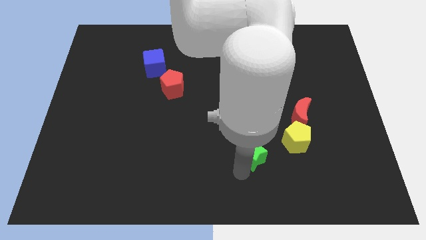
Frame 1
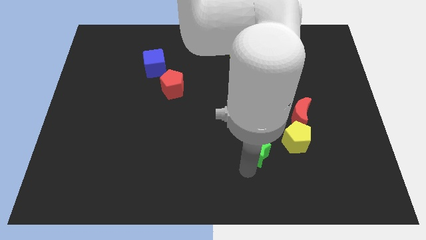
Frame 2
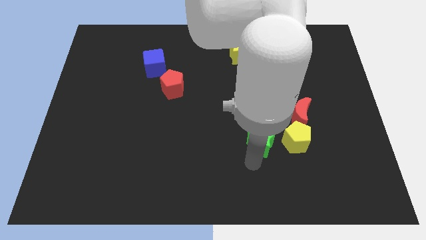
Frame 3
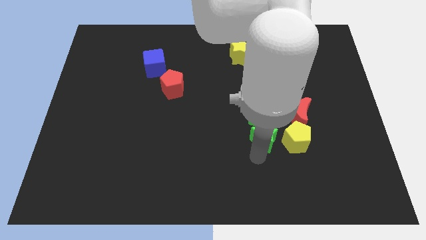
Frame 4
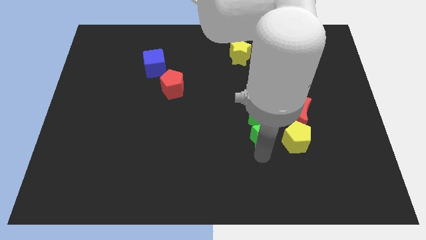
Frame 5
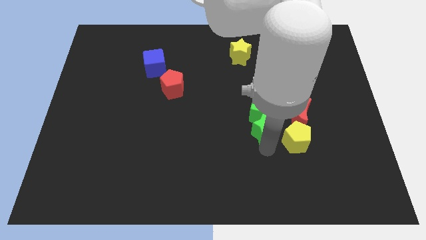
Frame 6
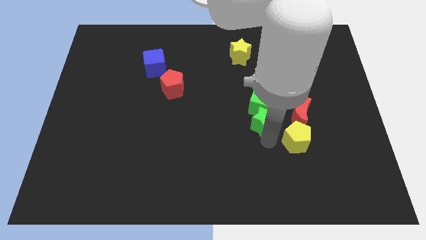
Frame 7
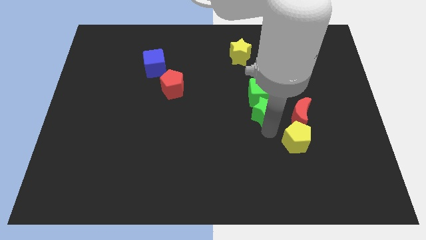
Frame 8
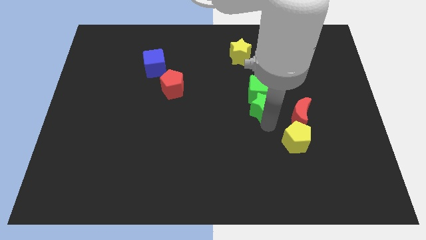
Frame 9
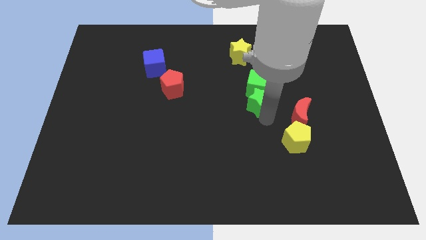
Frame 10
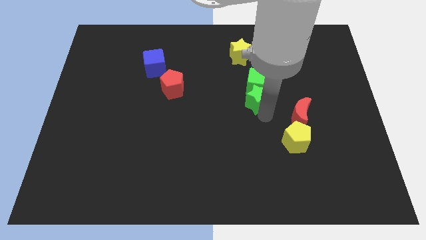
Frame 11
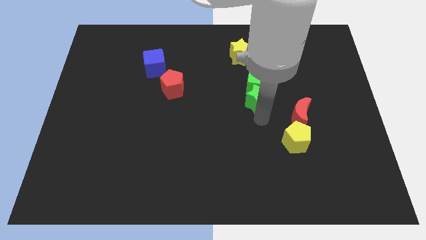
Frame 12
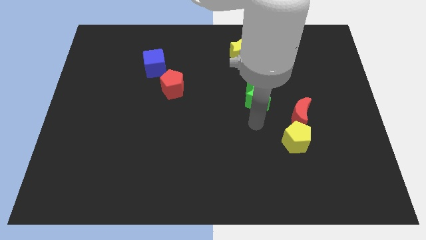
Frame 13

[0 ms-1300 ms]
slightly push both the green blocks to the top side

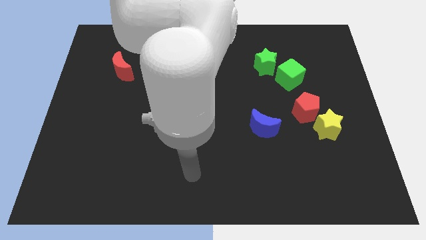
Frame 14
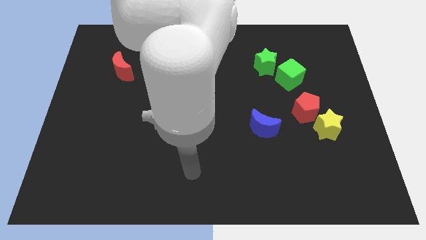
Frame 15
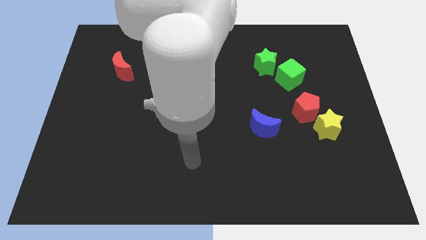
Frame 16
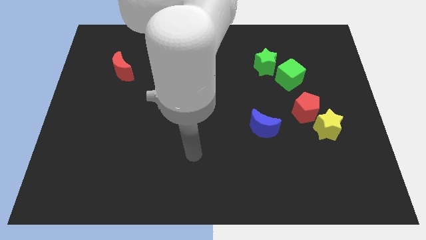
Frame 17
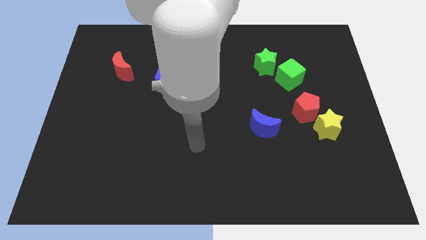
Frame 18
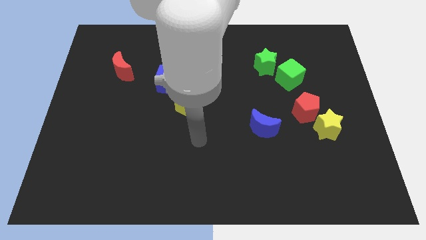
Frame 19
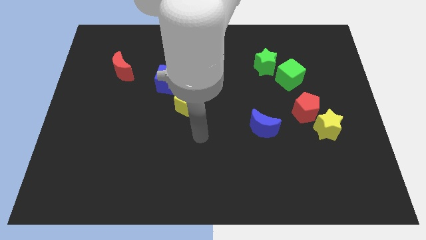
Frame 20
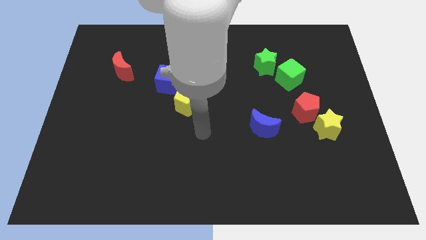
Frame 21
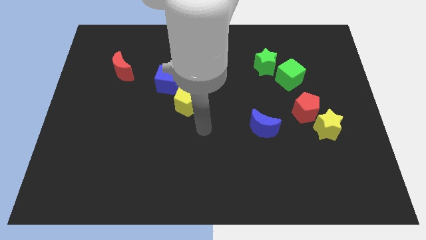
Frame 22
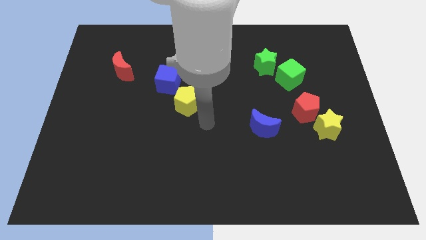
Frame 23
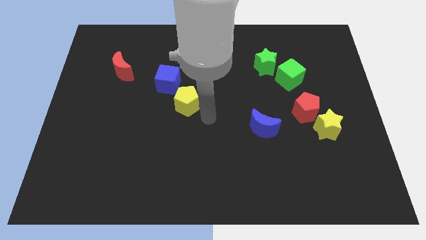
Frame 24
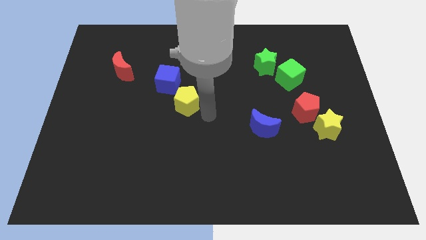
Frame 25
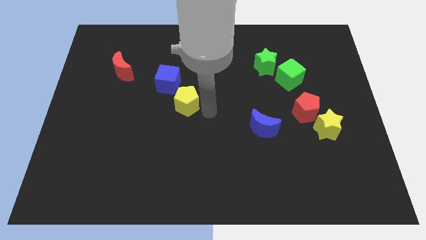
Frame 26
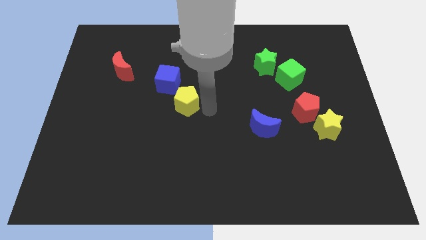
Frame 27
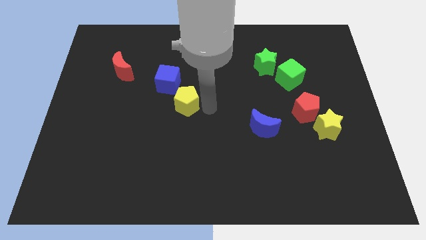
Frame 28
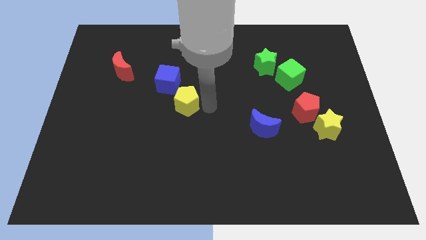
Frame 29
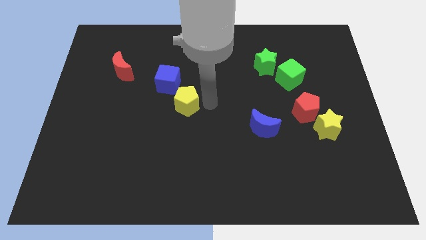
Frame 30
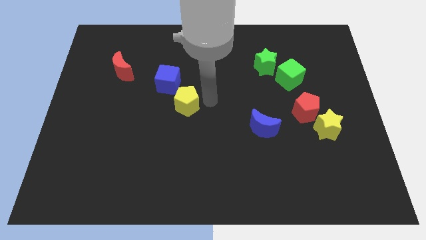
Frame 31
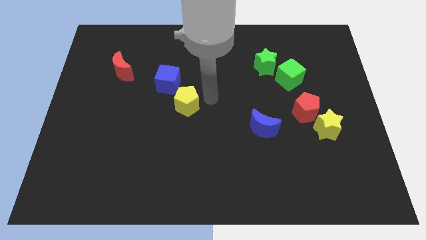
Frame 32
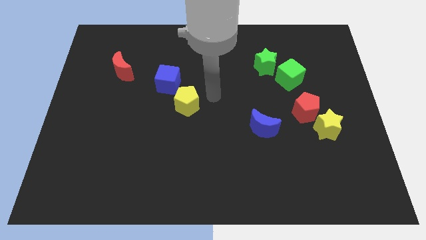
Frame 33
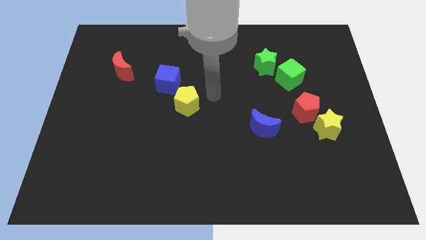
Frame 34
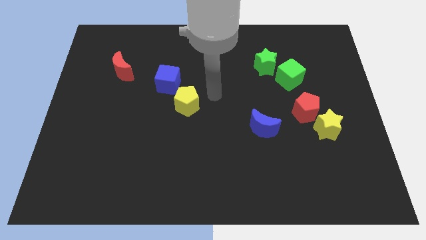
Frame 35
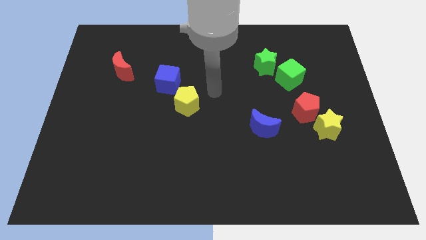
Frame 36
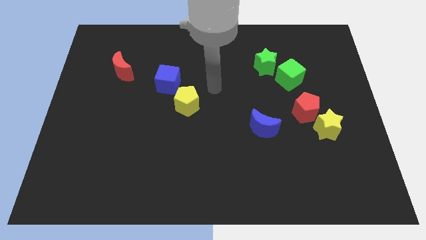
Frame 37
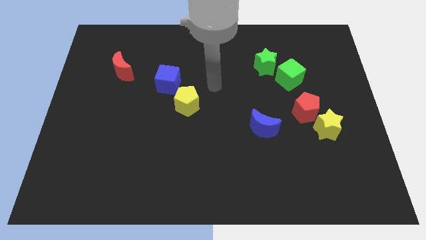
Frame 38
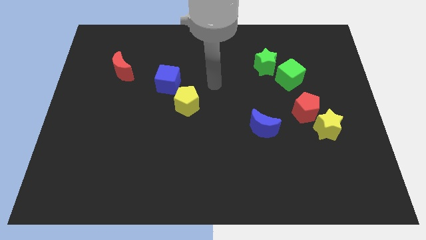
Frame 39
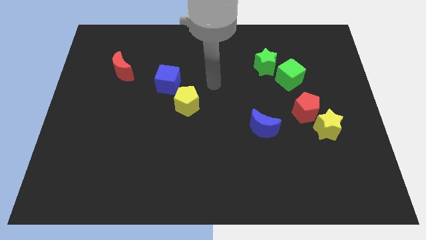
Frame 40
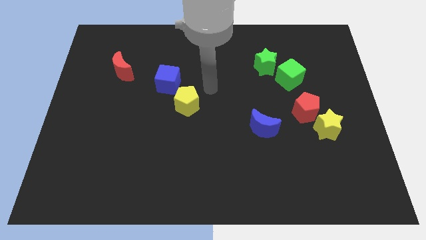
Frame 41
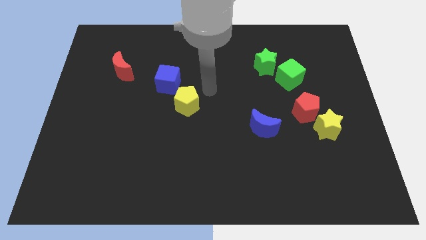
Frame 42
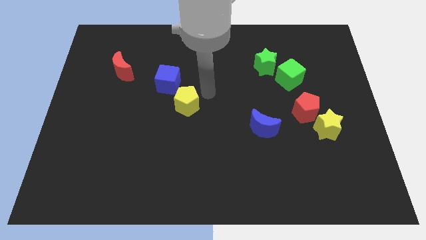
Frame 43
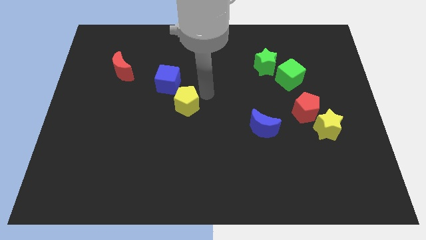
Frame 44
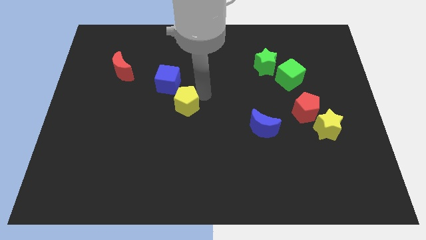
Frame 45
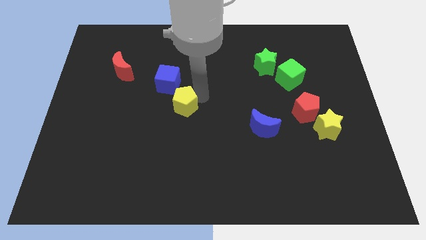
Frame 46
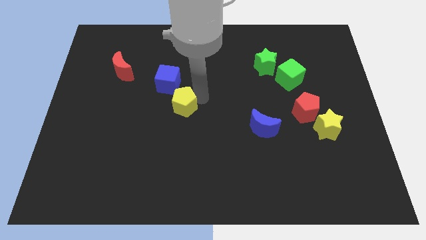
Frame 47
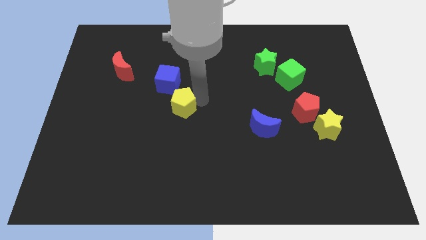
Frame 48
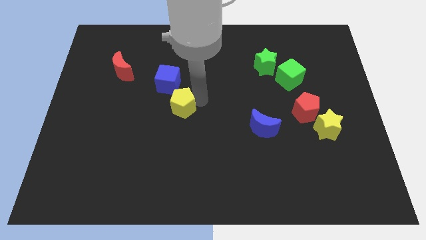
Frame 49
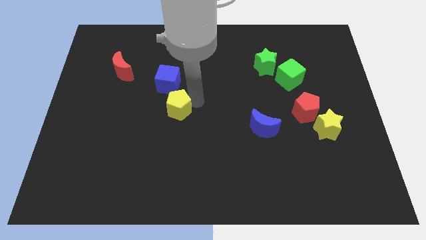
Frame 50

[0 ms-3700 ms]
move your arm towards the yellow pentagon

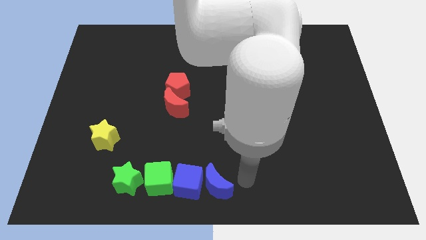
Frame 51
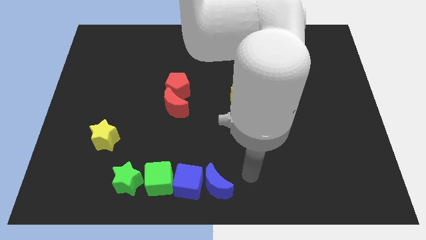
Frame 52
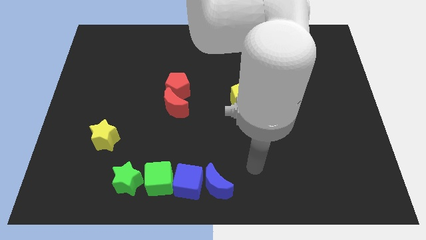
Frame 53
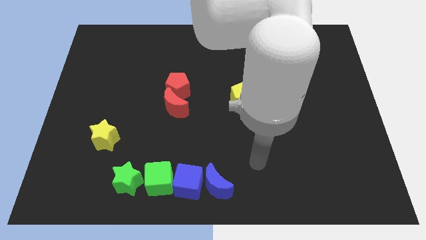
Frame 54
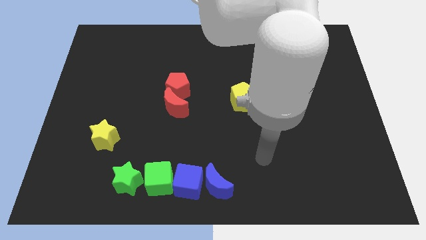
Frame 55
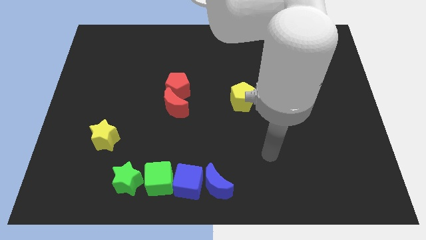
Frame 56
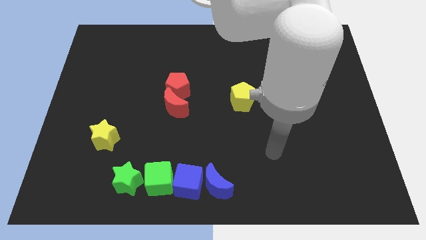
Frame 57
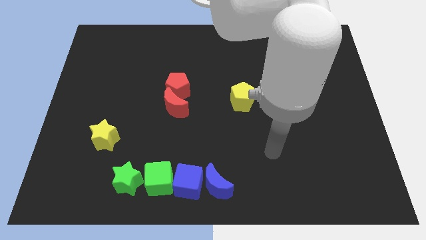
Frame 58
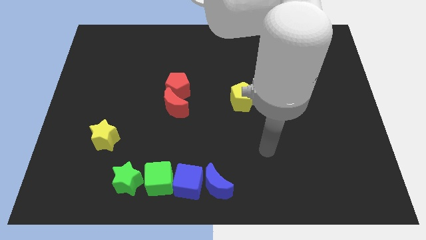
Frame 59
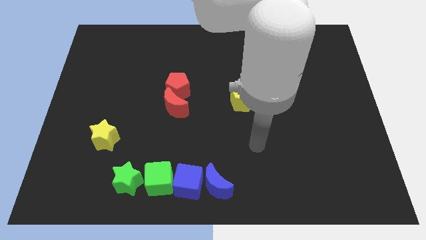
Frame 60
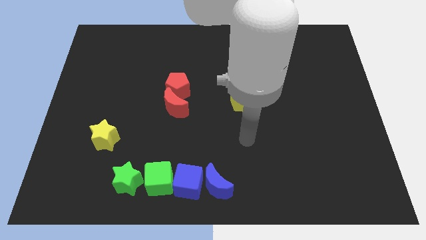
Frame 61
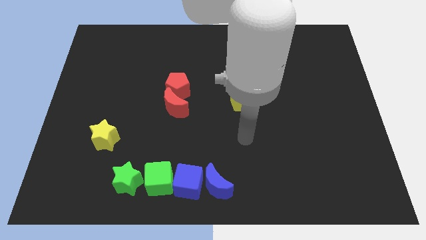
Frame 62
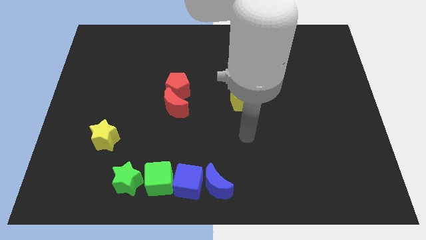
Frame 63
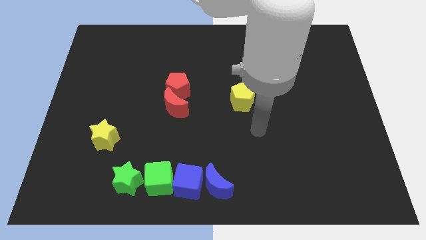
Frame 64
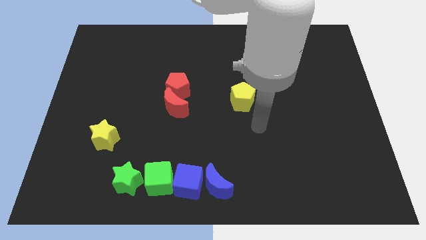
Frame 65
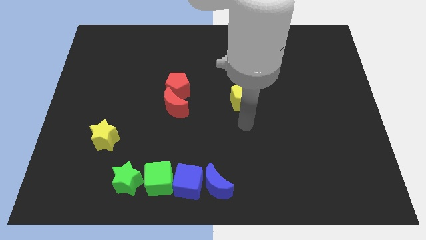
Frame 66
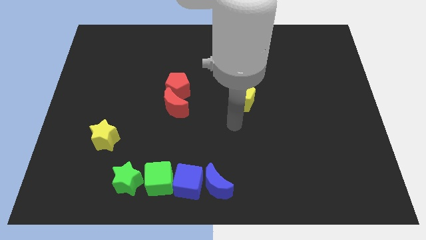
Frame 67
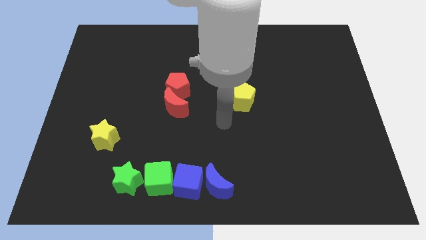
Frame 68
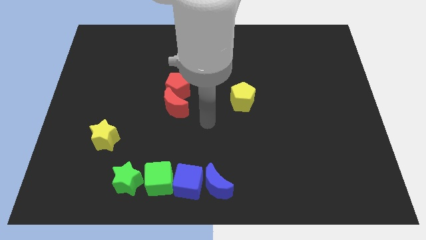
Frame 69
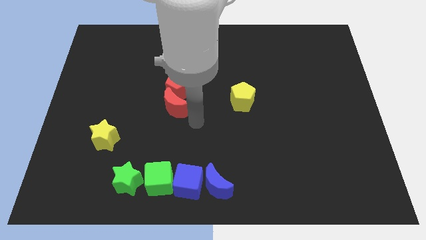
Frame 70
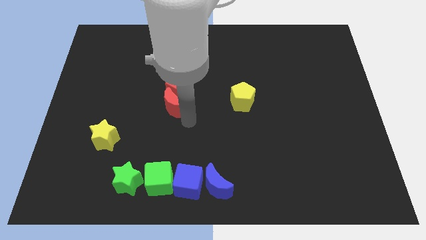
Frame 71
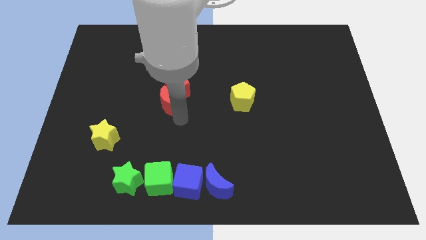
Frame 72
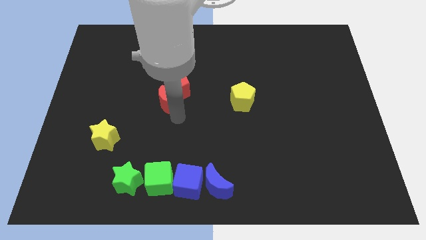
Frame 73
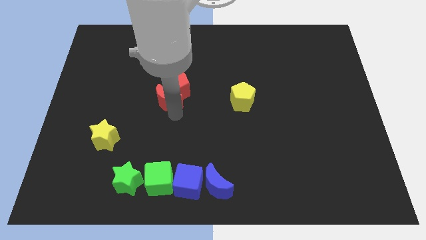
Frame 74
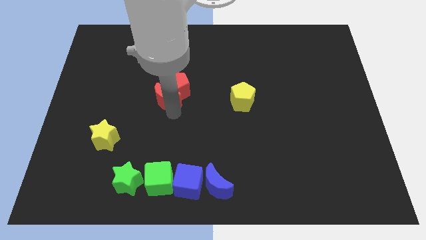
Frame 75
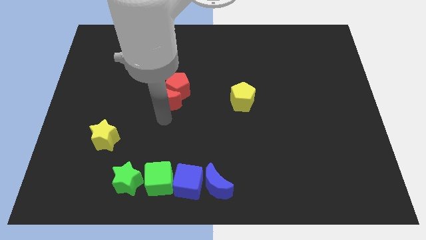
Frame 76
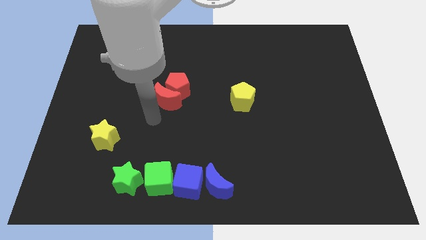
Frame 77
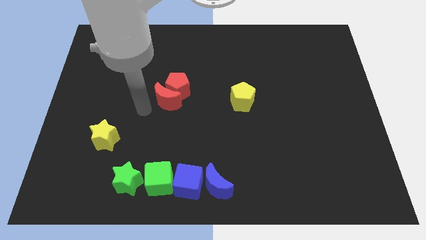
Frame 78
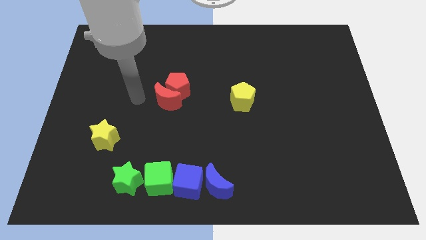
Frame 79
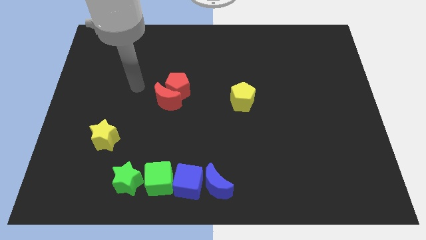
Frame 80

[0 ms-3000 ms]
slide the red moon into the red pentagon

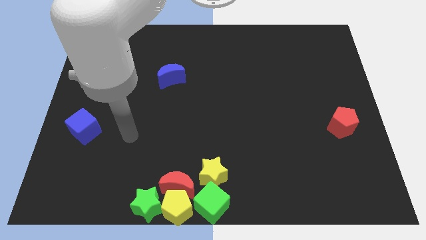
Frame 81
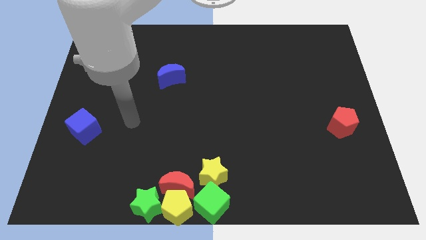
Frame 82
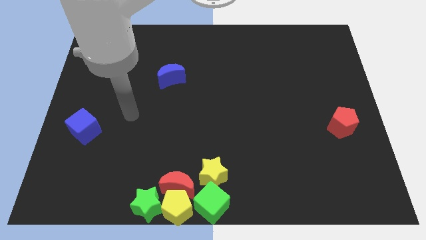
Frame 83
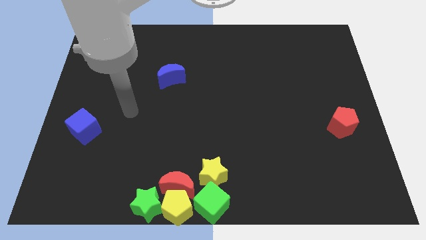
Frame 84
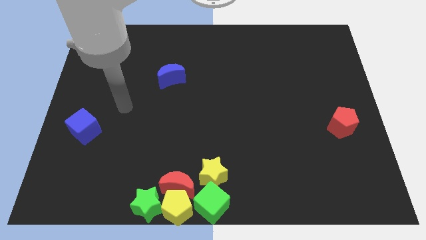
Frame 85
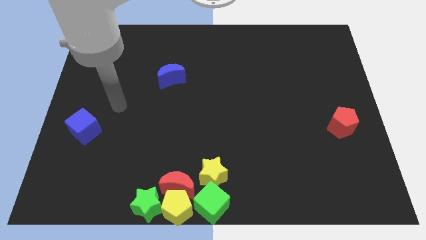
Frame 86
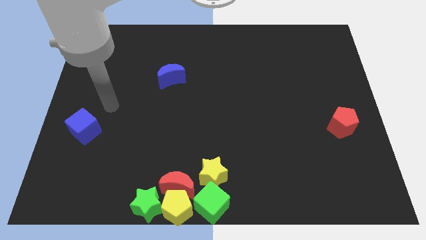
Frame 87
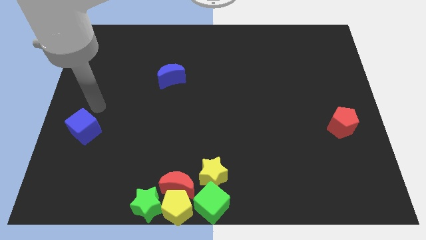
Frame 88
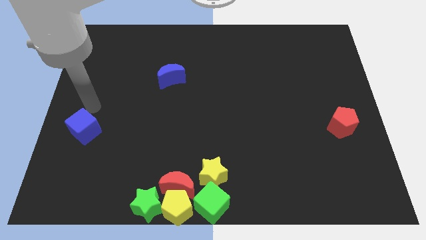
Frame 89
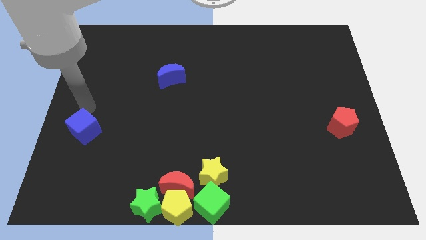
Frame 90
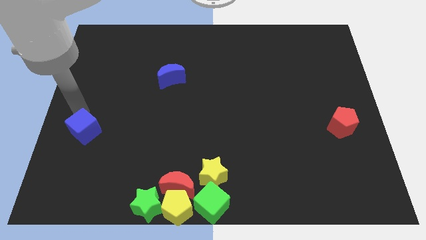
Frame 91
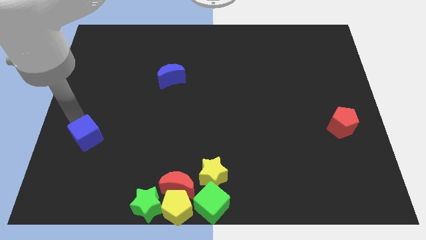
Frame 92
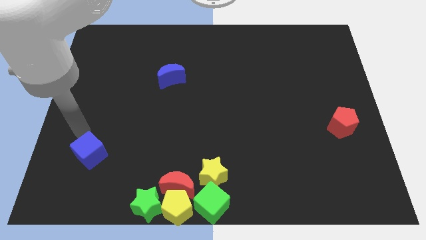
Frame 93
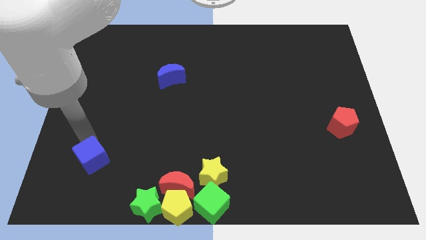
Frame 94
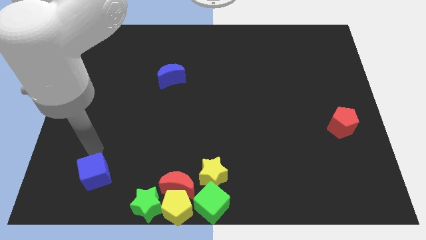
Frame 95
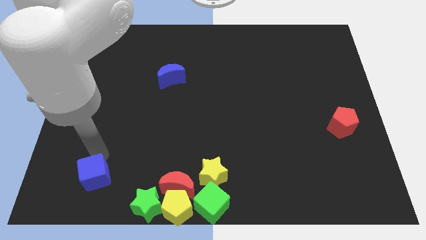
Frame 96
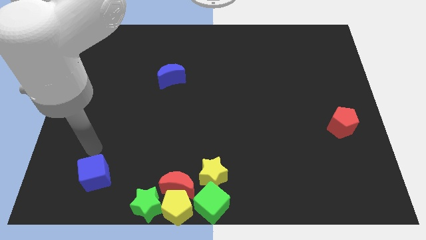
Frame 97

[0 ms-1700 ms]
drag the blue cube diagonally on the top left side of the green star
